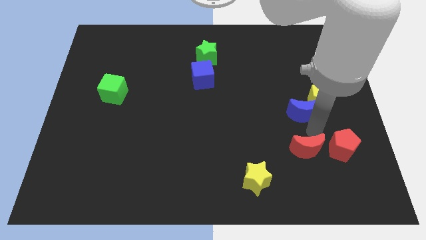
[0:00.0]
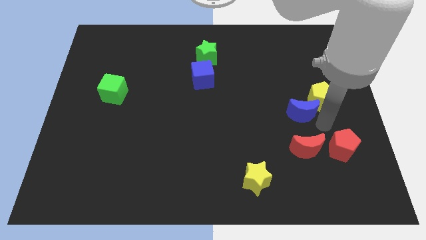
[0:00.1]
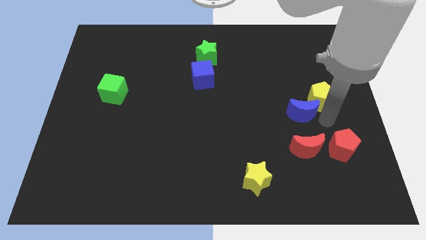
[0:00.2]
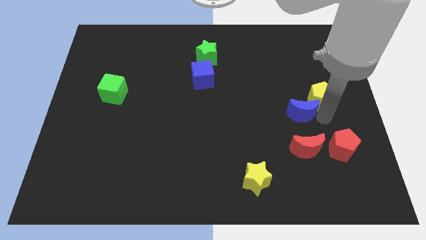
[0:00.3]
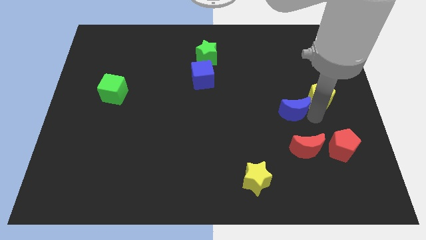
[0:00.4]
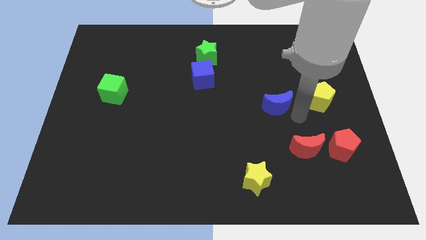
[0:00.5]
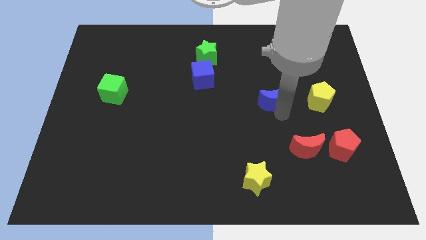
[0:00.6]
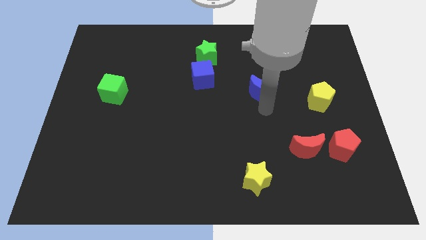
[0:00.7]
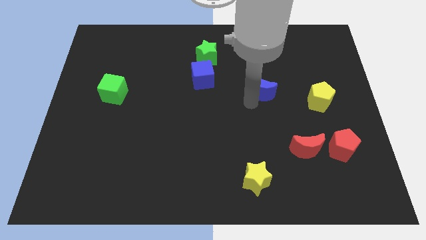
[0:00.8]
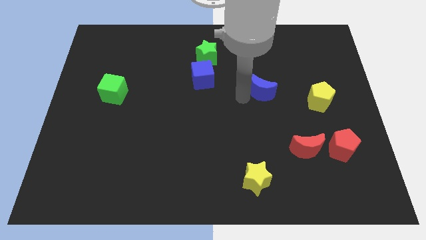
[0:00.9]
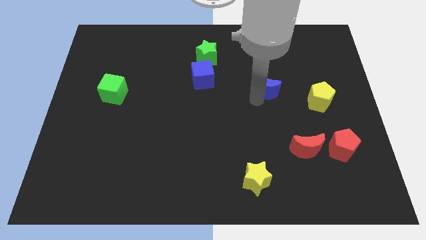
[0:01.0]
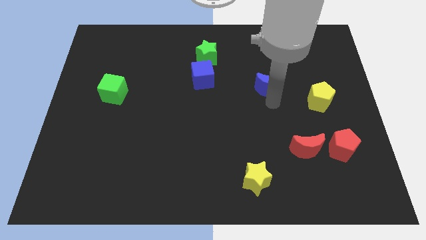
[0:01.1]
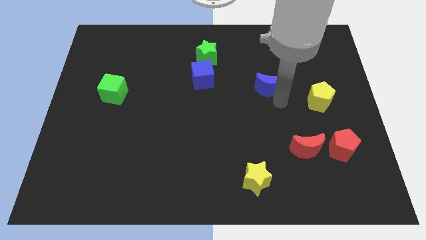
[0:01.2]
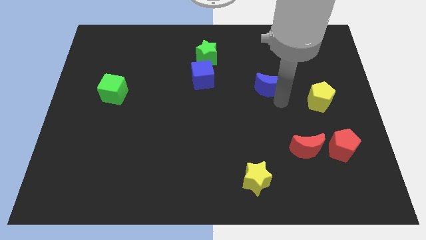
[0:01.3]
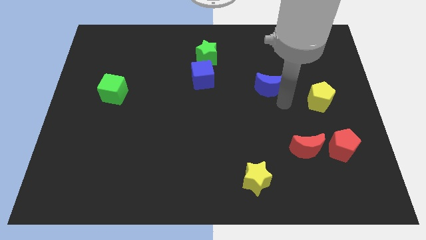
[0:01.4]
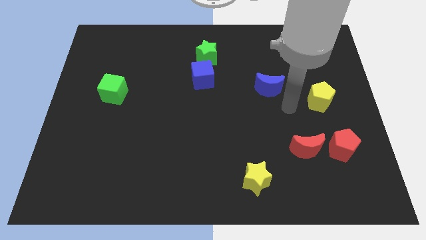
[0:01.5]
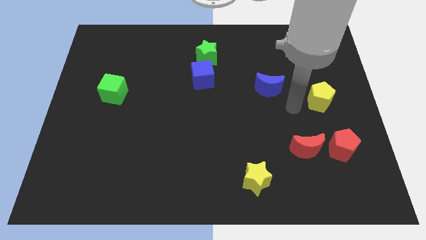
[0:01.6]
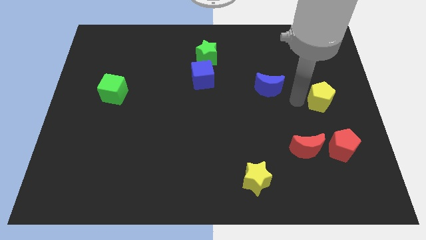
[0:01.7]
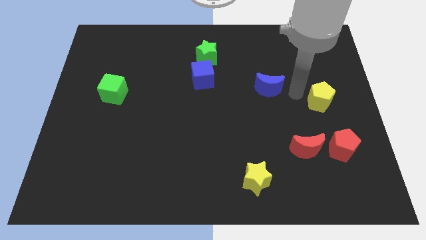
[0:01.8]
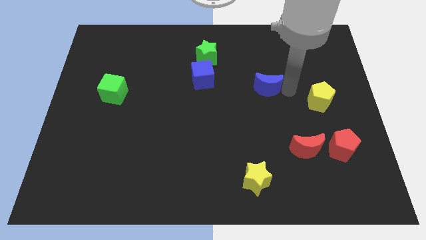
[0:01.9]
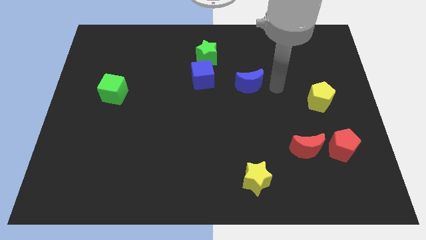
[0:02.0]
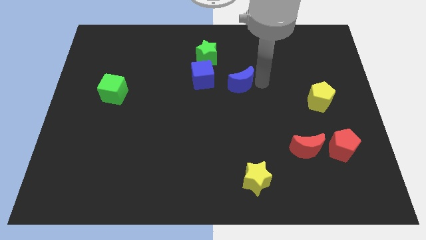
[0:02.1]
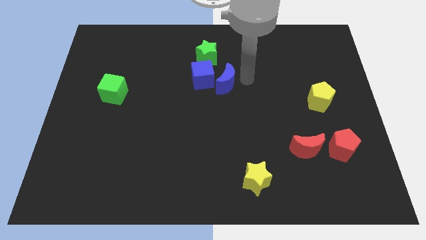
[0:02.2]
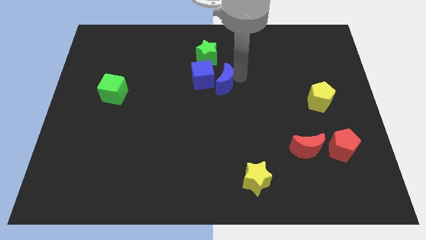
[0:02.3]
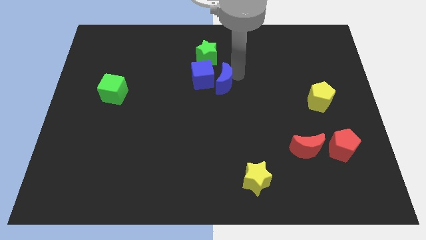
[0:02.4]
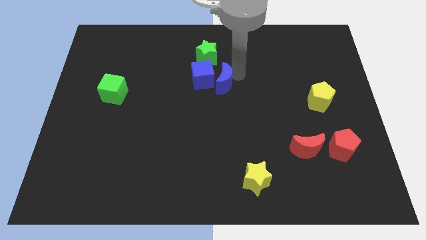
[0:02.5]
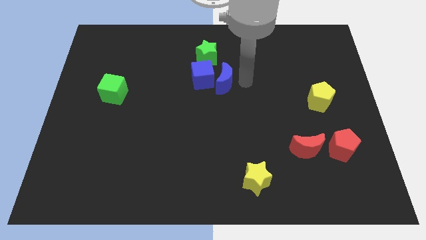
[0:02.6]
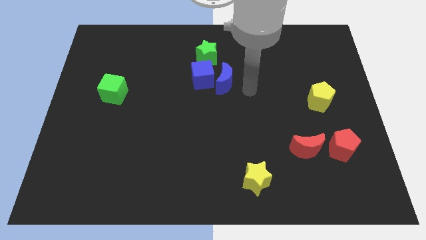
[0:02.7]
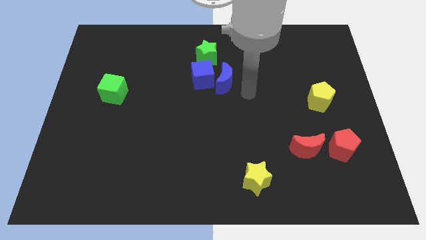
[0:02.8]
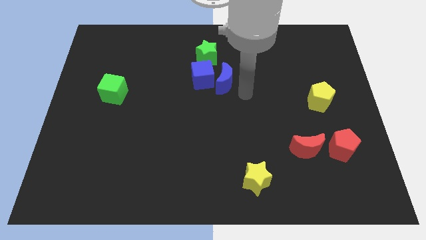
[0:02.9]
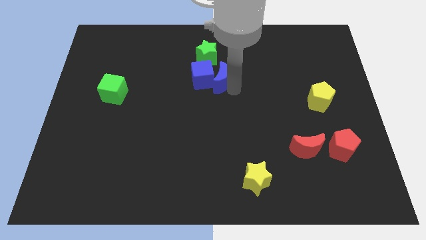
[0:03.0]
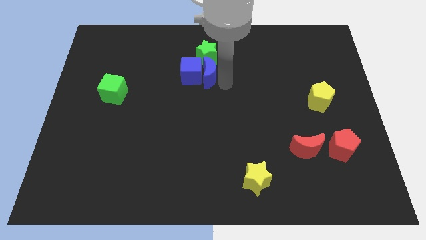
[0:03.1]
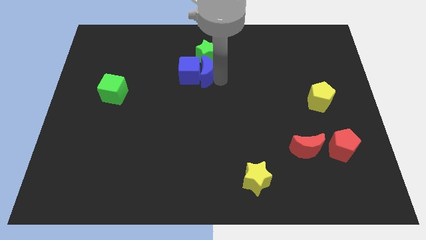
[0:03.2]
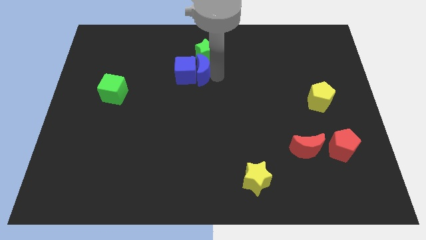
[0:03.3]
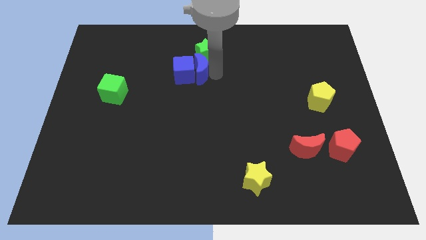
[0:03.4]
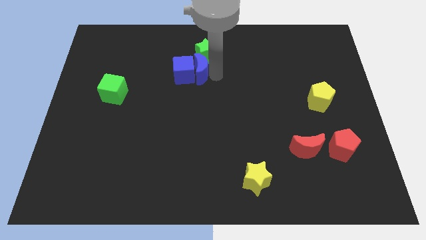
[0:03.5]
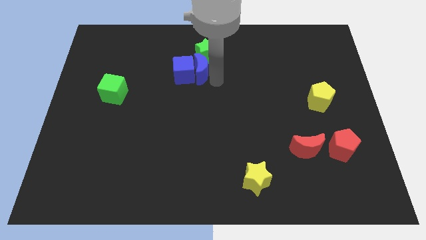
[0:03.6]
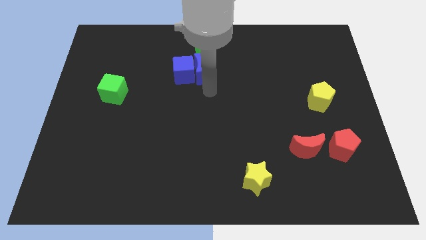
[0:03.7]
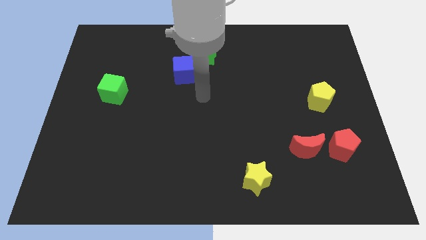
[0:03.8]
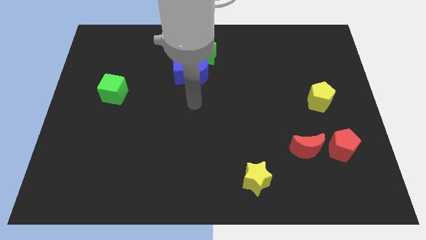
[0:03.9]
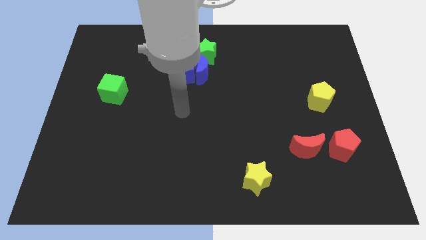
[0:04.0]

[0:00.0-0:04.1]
move the blue moon to the right side of the blue cube

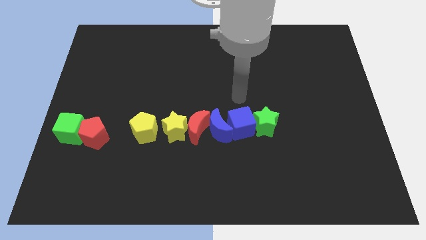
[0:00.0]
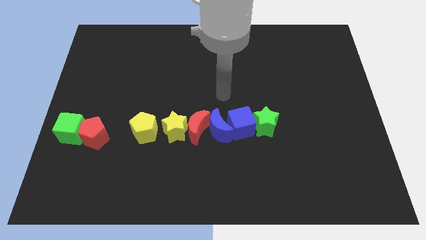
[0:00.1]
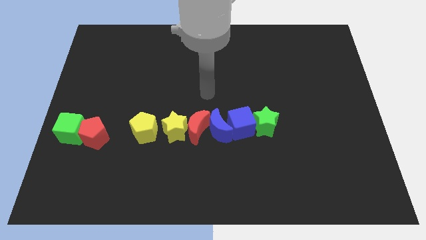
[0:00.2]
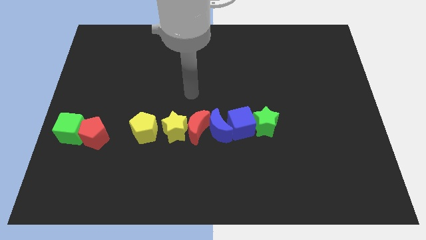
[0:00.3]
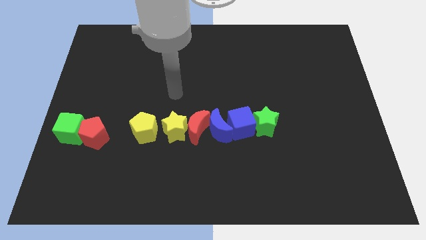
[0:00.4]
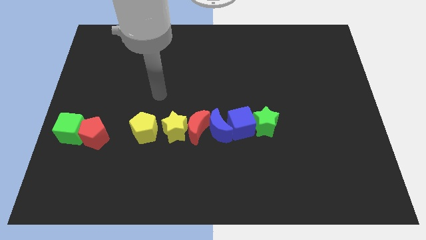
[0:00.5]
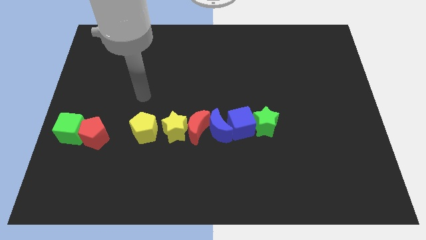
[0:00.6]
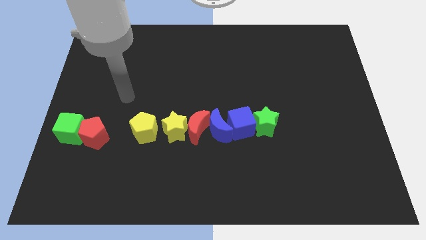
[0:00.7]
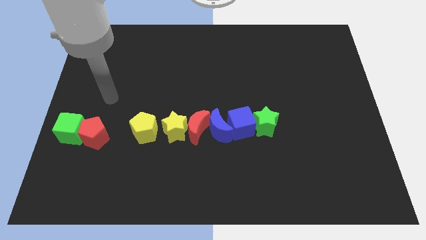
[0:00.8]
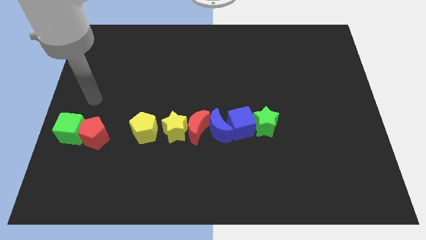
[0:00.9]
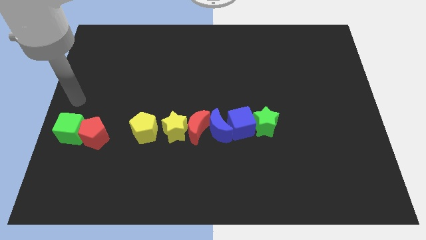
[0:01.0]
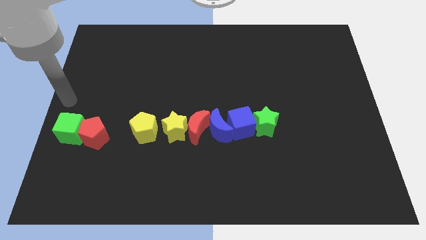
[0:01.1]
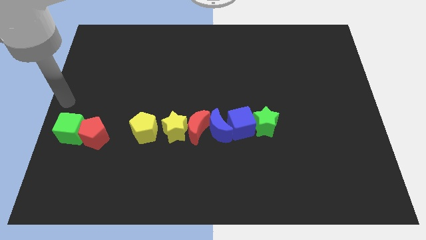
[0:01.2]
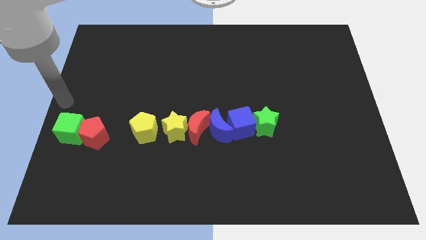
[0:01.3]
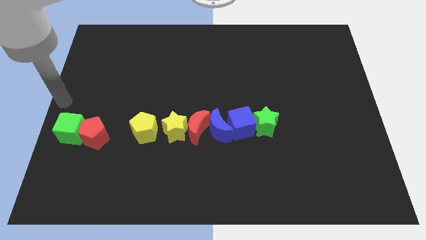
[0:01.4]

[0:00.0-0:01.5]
move your arm to the left center of the board

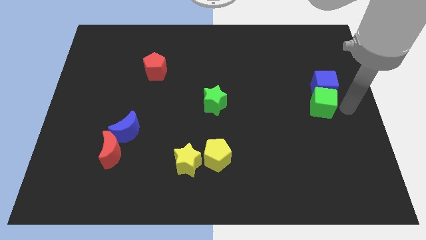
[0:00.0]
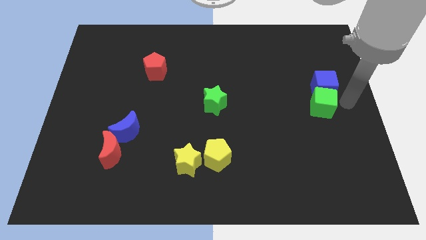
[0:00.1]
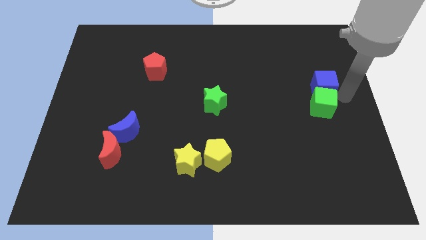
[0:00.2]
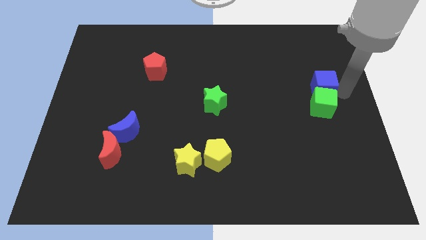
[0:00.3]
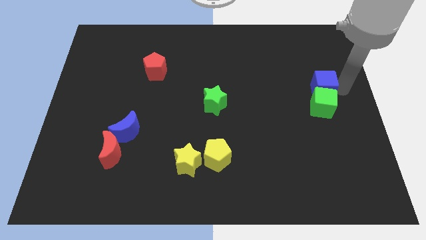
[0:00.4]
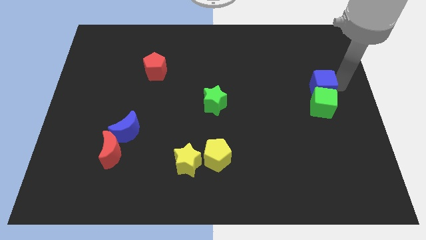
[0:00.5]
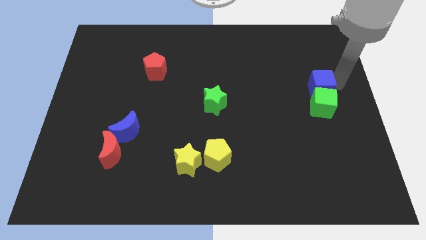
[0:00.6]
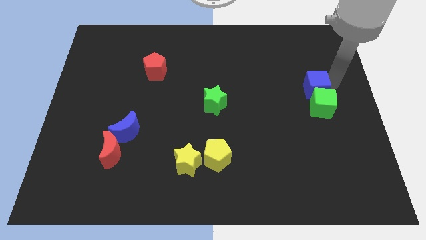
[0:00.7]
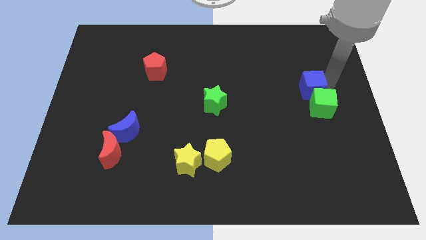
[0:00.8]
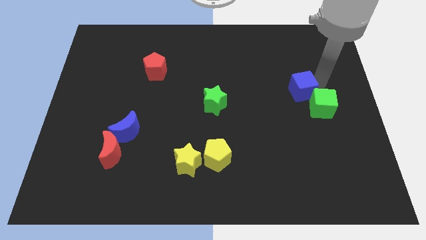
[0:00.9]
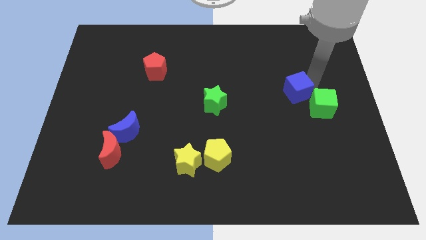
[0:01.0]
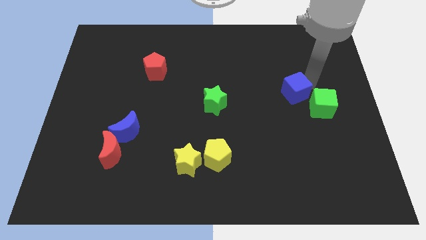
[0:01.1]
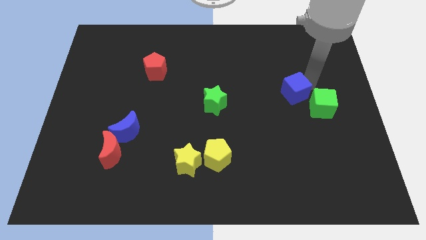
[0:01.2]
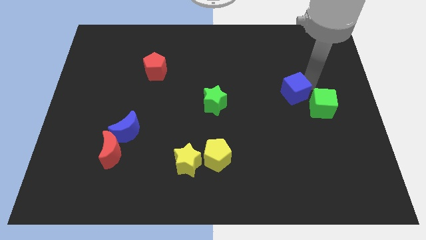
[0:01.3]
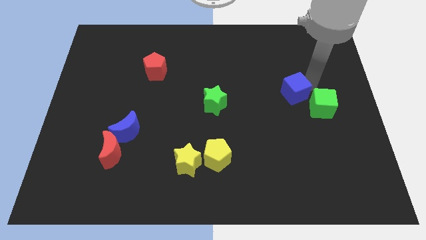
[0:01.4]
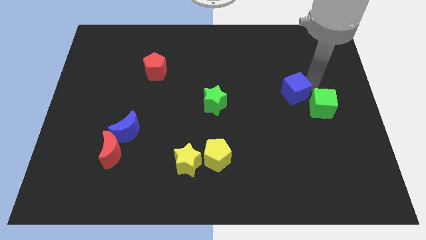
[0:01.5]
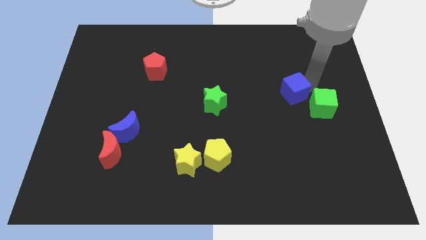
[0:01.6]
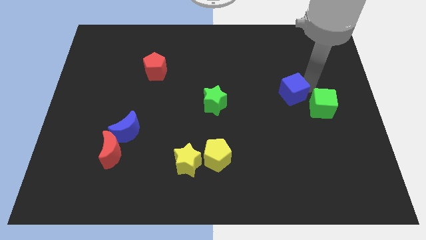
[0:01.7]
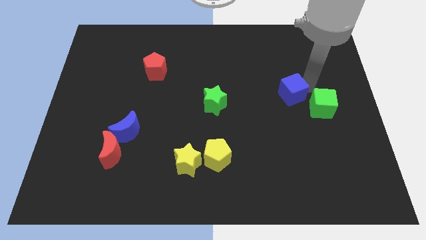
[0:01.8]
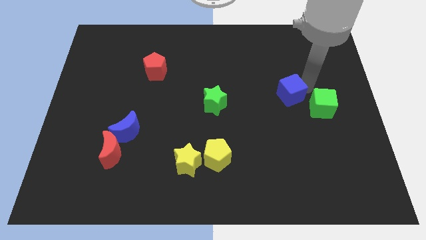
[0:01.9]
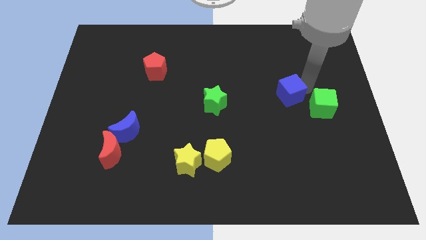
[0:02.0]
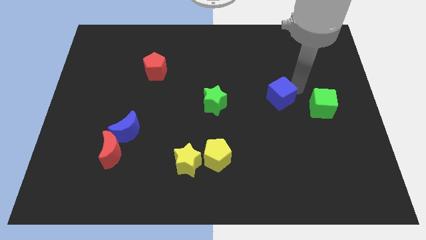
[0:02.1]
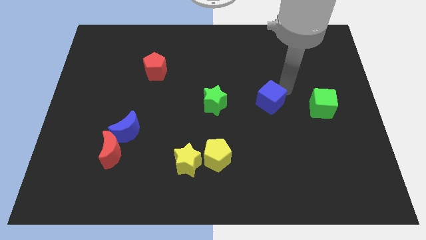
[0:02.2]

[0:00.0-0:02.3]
move the blue cube away from the green cube

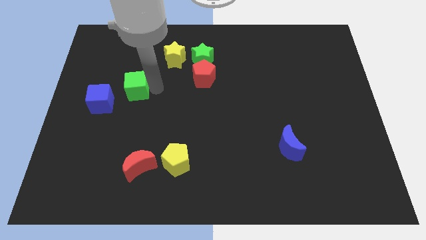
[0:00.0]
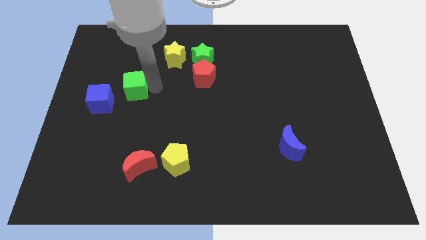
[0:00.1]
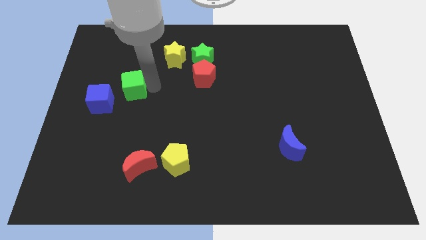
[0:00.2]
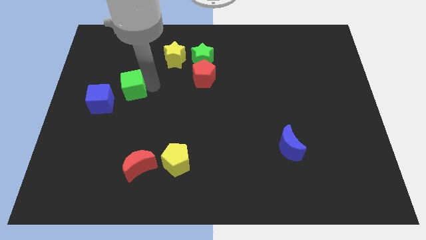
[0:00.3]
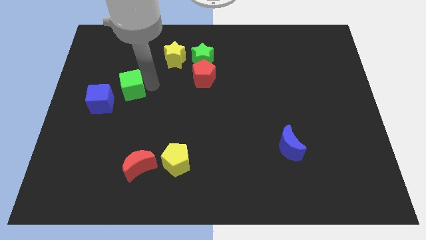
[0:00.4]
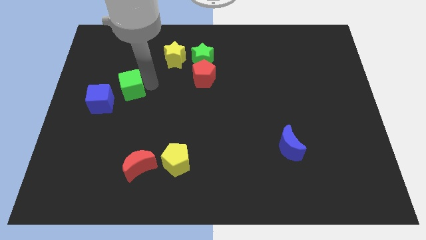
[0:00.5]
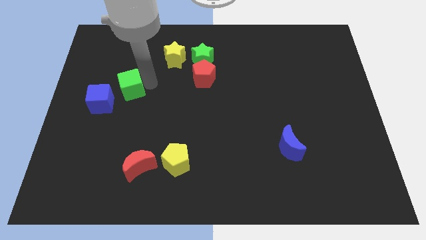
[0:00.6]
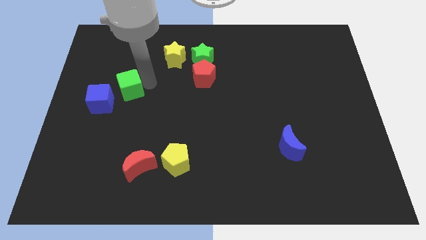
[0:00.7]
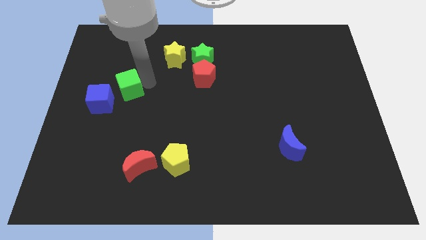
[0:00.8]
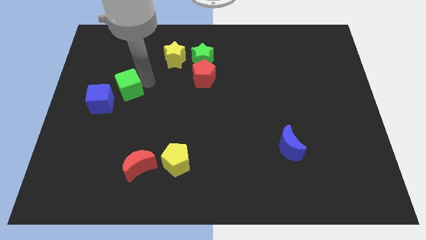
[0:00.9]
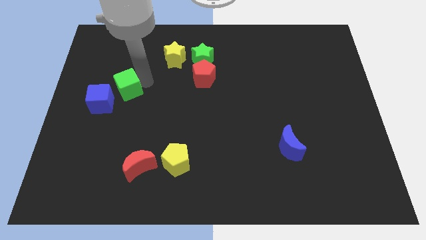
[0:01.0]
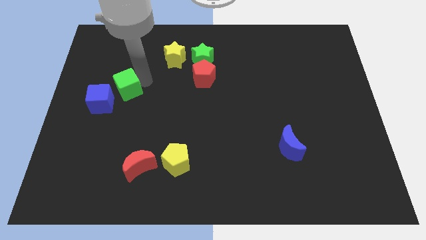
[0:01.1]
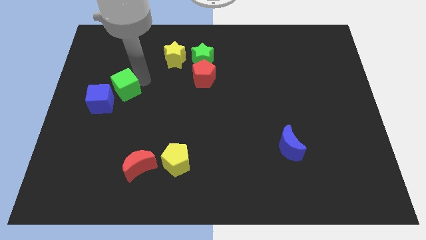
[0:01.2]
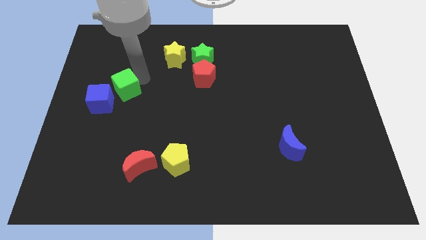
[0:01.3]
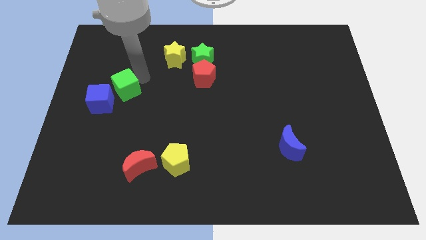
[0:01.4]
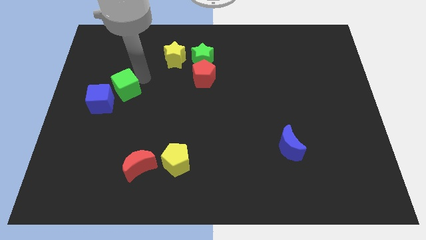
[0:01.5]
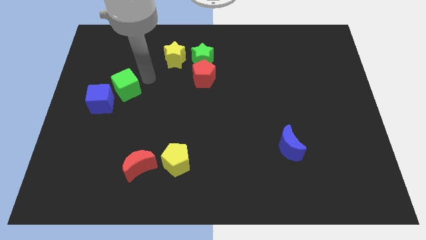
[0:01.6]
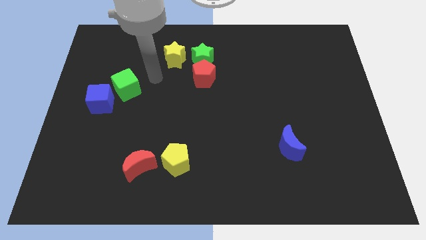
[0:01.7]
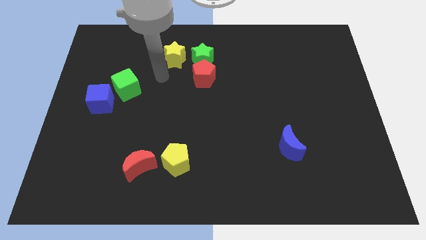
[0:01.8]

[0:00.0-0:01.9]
place the green cube at the top right corner of blue cube
